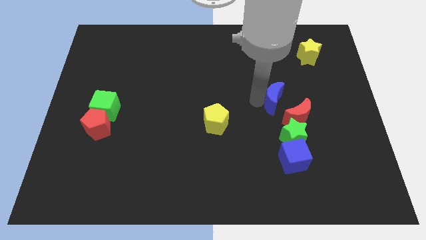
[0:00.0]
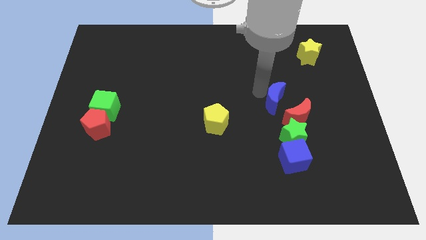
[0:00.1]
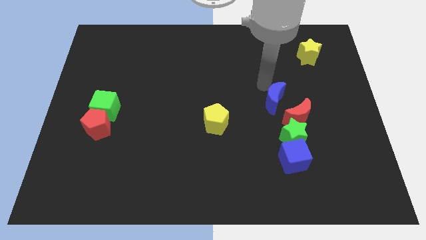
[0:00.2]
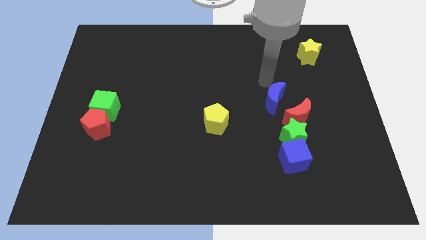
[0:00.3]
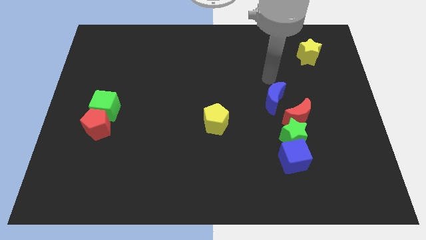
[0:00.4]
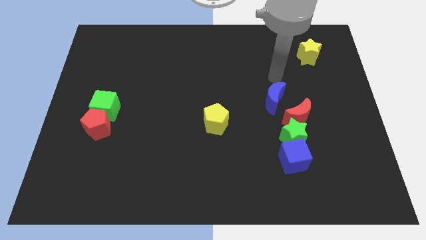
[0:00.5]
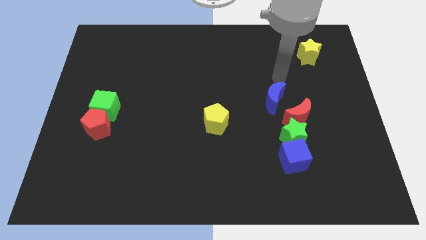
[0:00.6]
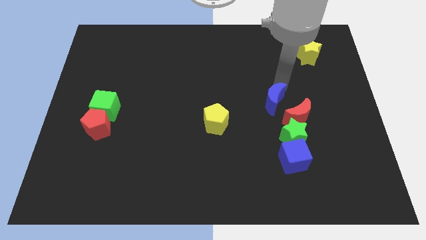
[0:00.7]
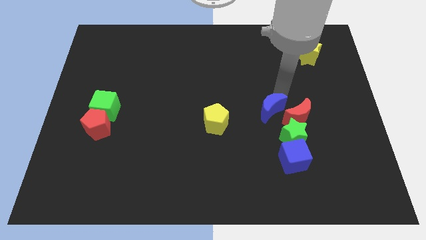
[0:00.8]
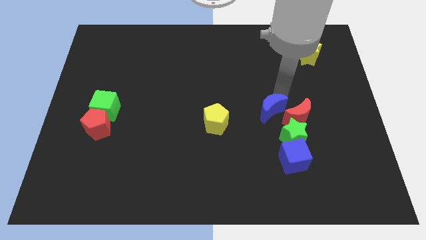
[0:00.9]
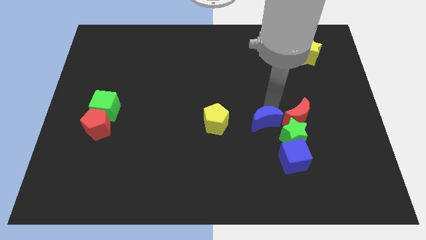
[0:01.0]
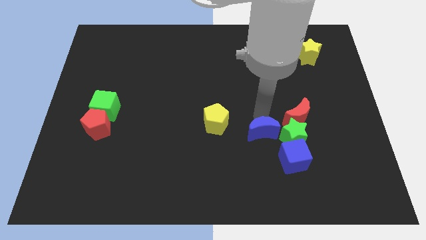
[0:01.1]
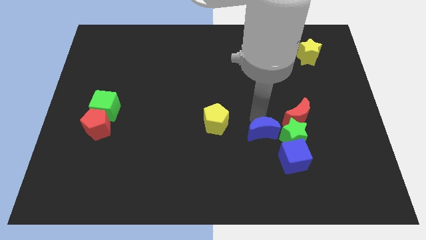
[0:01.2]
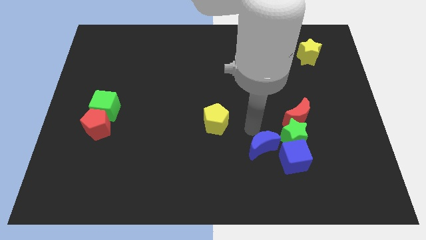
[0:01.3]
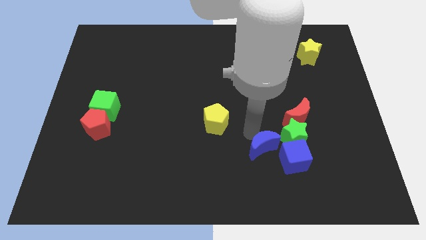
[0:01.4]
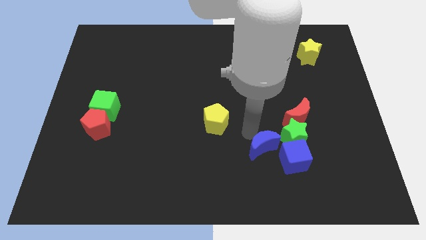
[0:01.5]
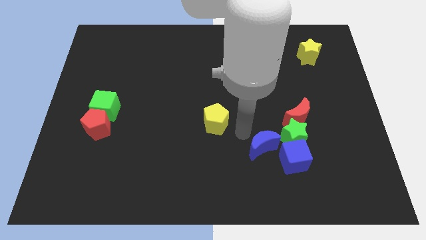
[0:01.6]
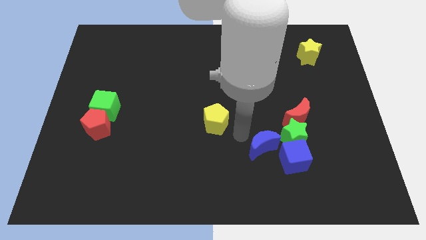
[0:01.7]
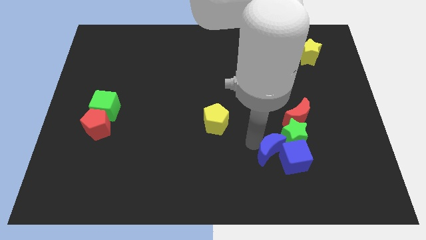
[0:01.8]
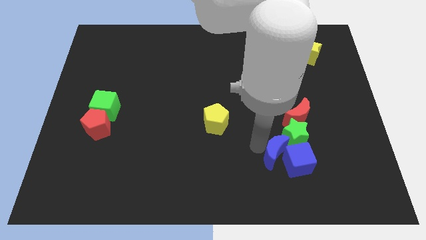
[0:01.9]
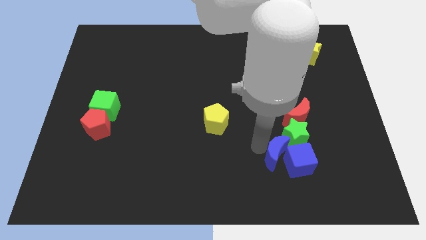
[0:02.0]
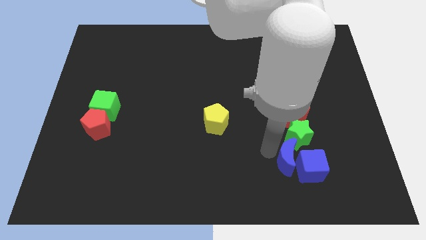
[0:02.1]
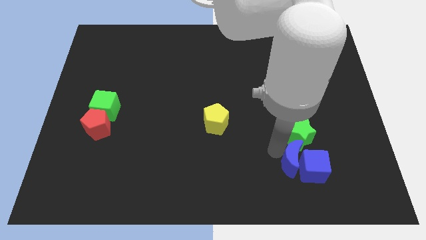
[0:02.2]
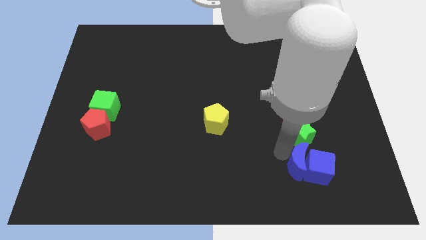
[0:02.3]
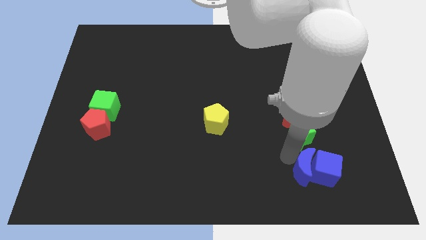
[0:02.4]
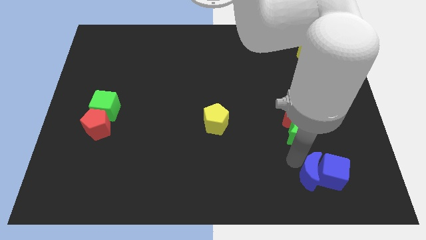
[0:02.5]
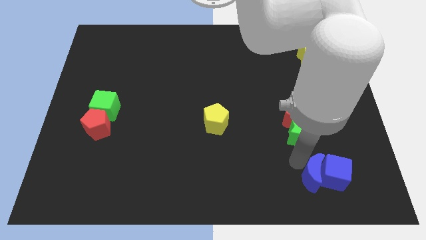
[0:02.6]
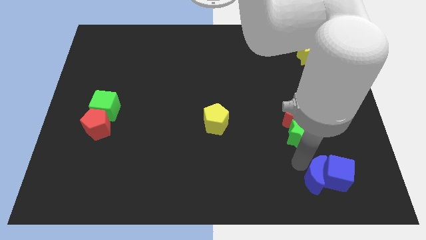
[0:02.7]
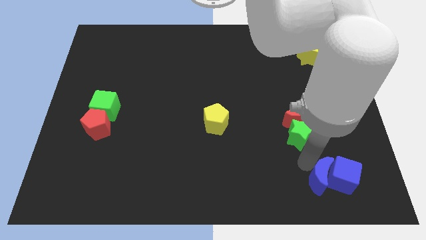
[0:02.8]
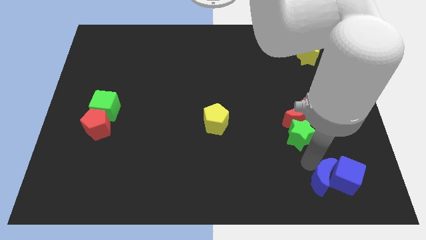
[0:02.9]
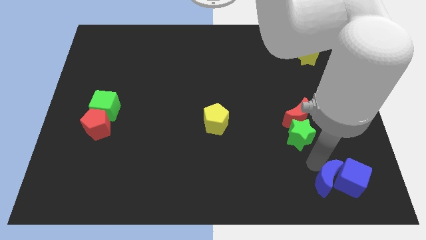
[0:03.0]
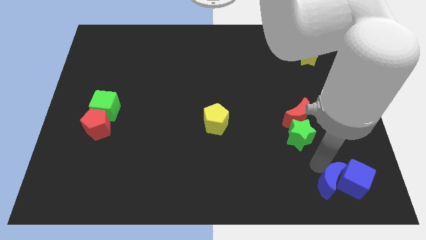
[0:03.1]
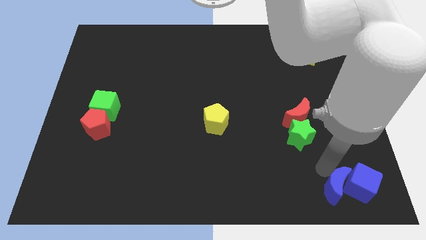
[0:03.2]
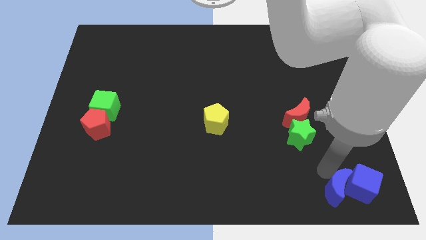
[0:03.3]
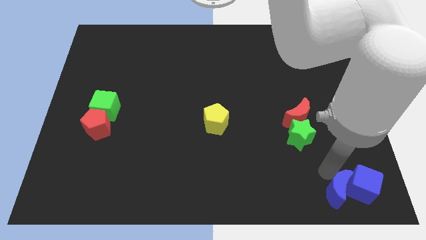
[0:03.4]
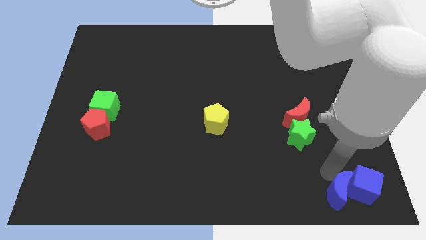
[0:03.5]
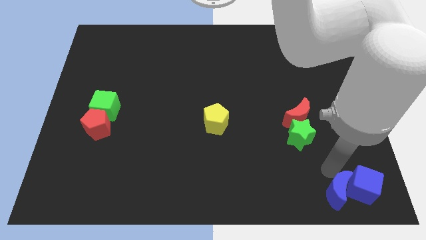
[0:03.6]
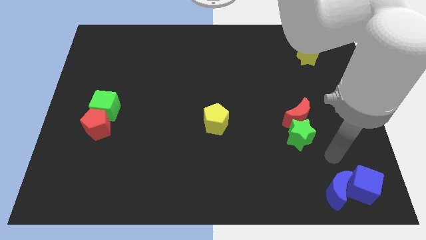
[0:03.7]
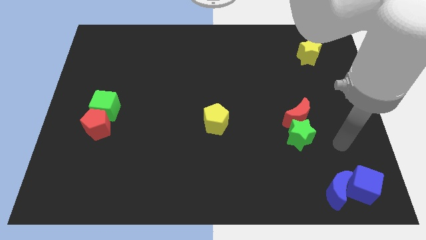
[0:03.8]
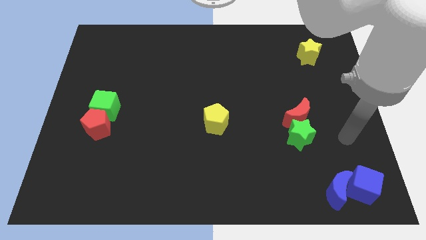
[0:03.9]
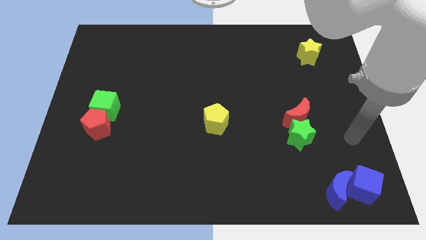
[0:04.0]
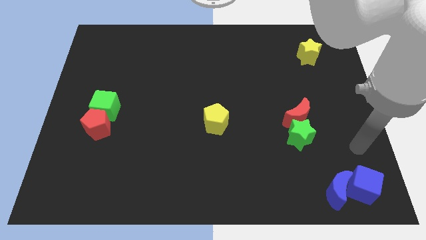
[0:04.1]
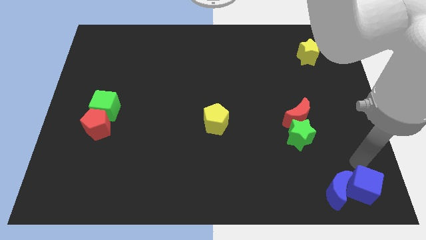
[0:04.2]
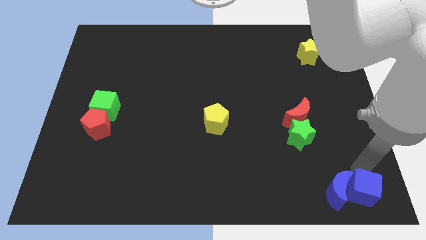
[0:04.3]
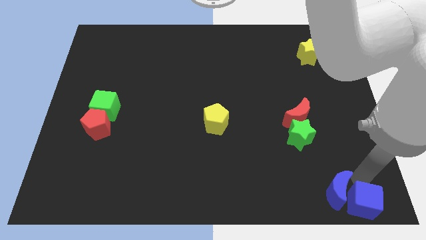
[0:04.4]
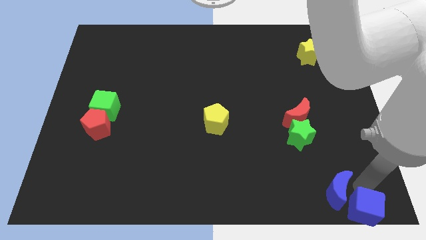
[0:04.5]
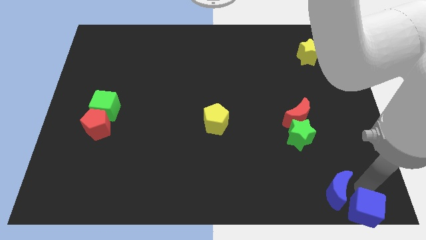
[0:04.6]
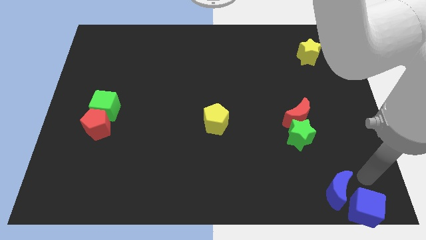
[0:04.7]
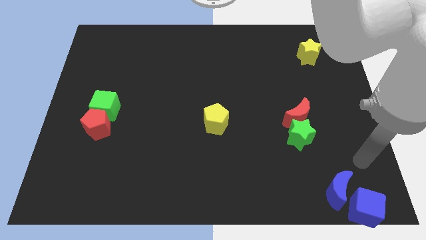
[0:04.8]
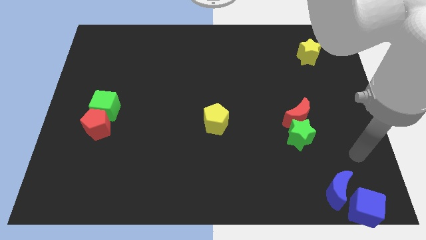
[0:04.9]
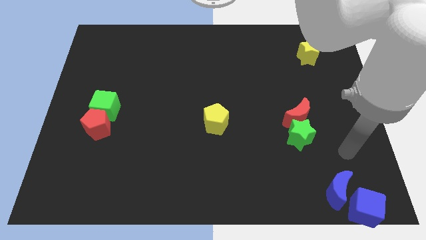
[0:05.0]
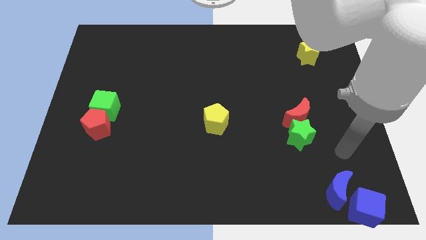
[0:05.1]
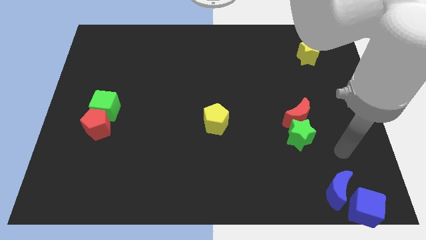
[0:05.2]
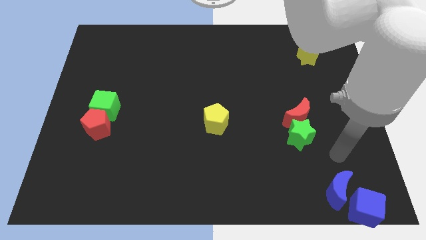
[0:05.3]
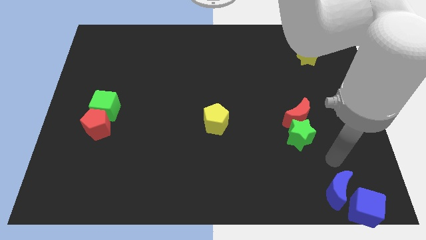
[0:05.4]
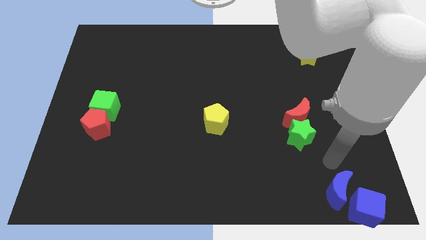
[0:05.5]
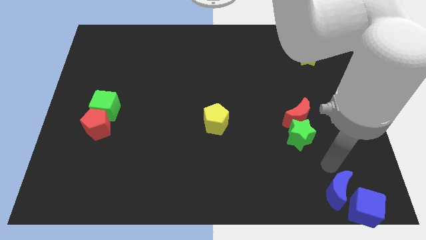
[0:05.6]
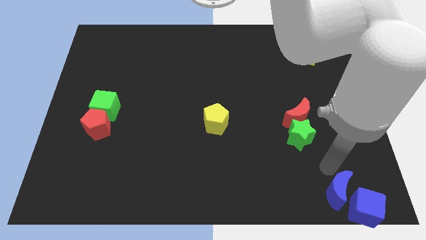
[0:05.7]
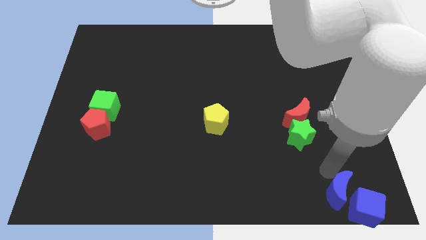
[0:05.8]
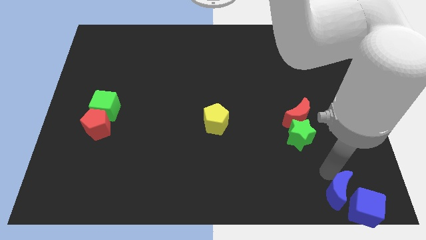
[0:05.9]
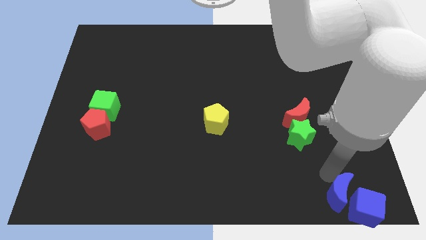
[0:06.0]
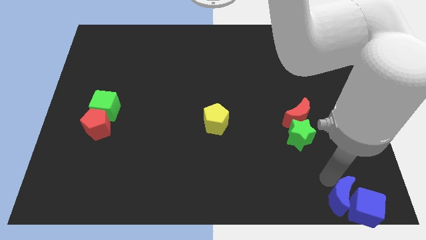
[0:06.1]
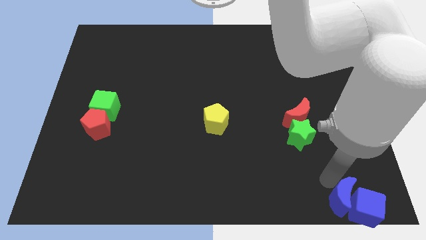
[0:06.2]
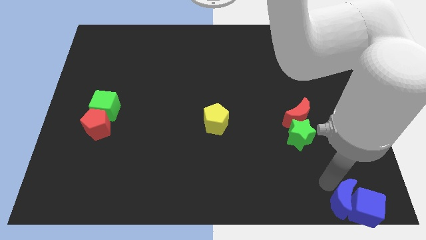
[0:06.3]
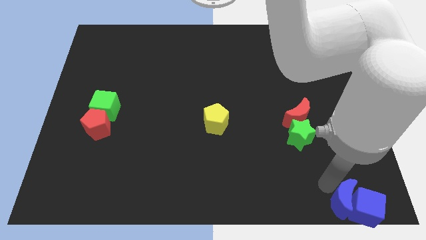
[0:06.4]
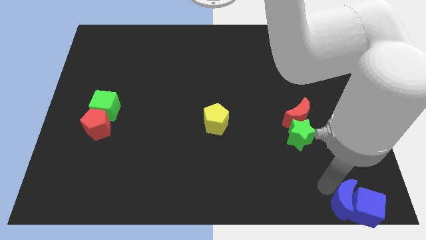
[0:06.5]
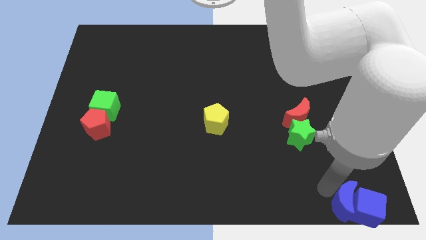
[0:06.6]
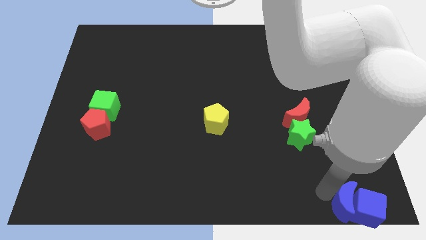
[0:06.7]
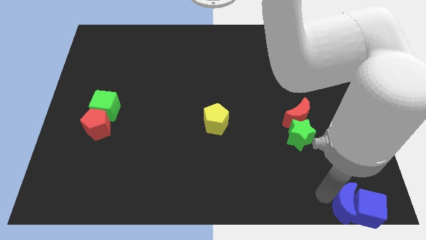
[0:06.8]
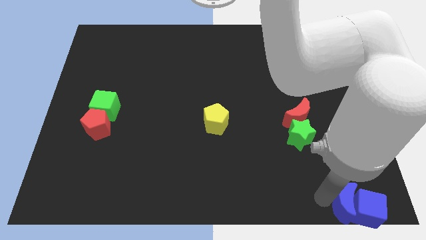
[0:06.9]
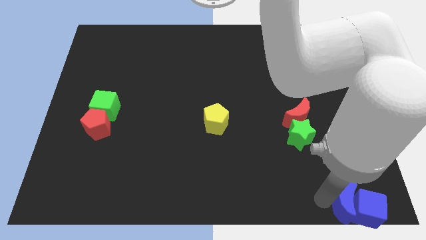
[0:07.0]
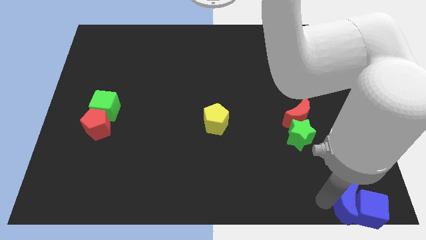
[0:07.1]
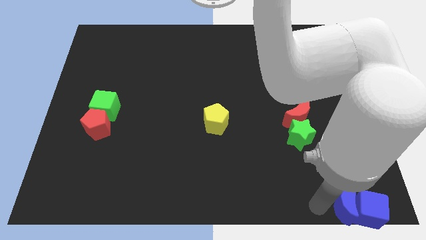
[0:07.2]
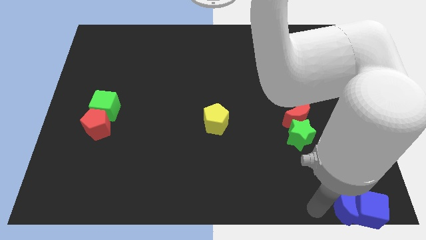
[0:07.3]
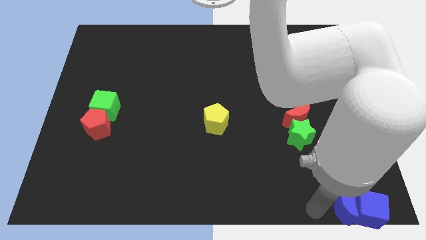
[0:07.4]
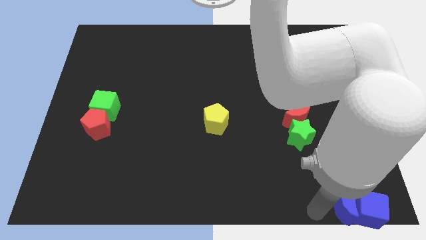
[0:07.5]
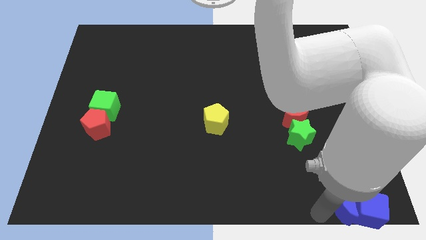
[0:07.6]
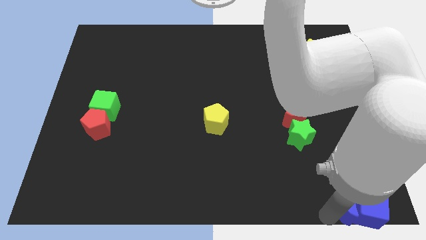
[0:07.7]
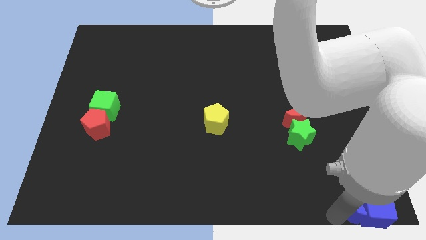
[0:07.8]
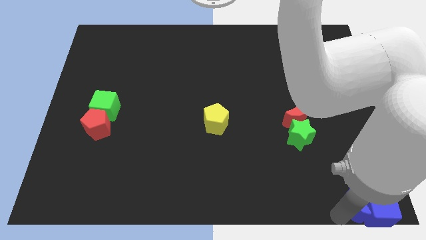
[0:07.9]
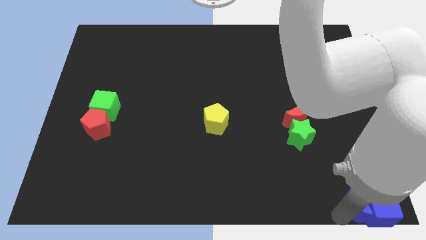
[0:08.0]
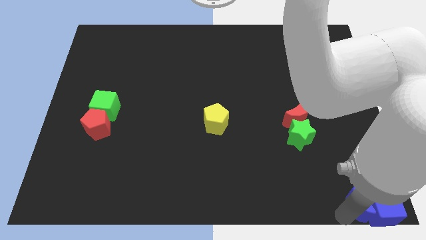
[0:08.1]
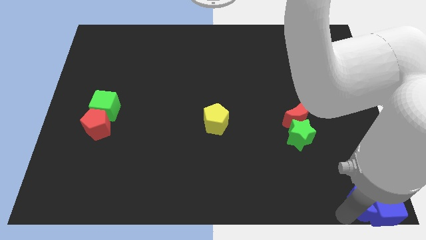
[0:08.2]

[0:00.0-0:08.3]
push both the blue blocks into the bottom right corner

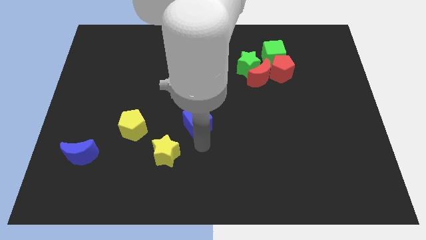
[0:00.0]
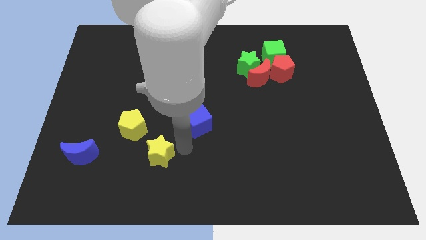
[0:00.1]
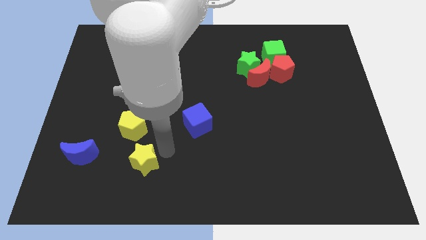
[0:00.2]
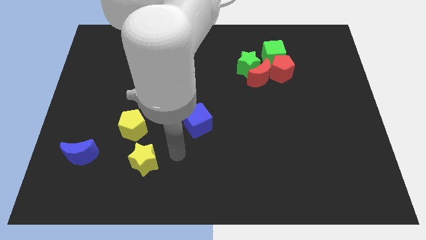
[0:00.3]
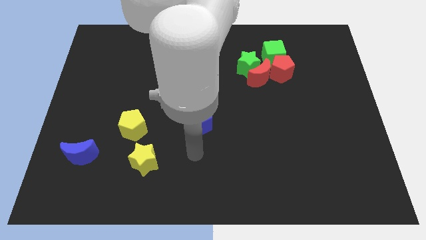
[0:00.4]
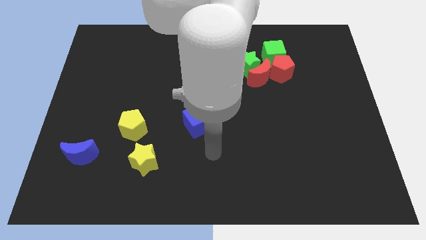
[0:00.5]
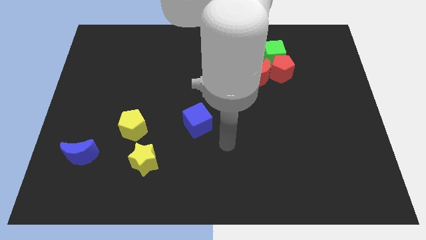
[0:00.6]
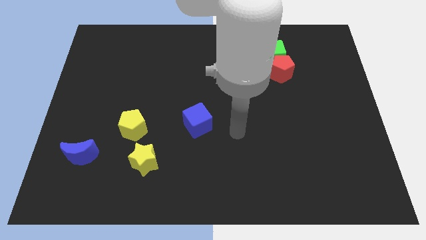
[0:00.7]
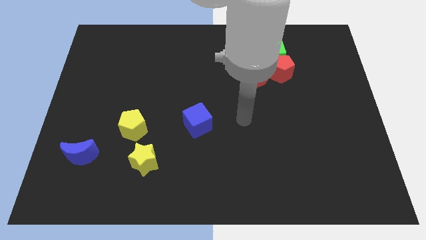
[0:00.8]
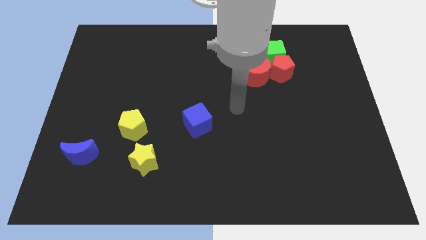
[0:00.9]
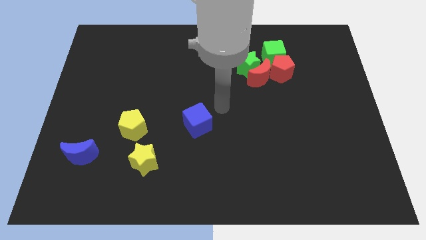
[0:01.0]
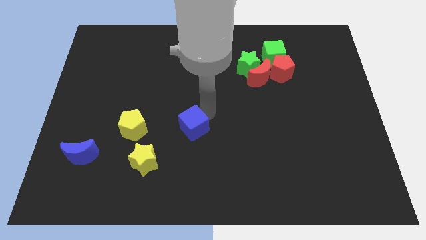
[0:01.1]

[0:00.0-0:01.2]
push the yellow star to the bottom right side of the yellow pentagon
